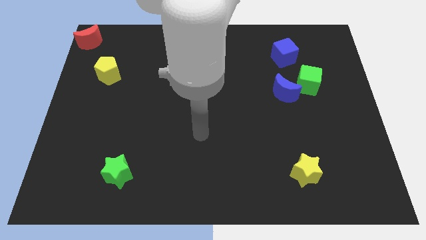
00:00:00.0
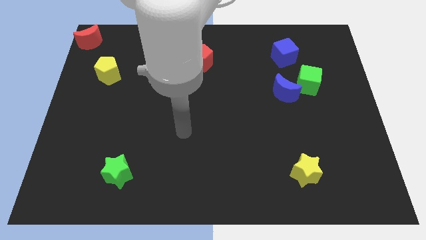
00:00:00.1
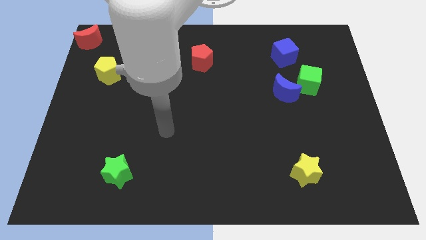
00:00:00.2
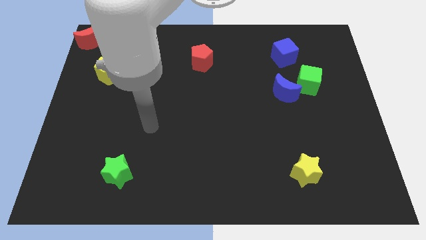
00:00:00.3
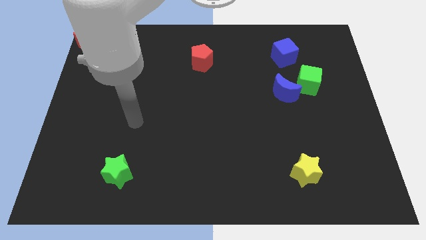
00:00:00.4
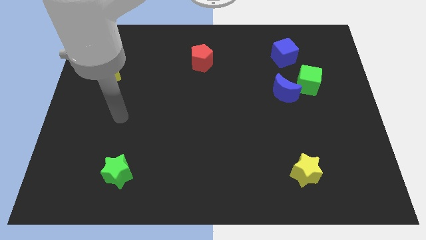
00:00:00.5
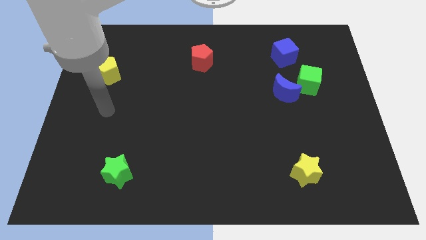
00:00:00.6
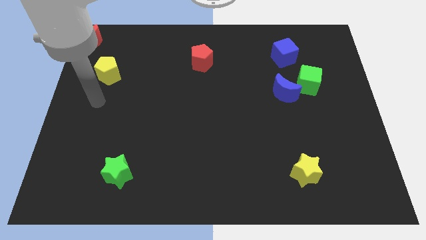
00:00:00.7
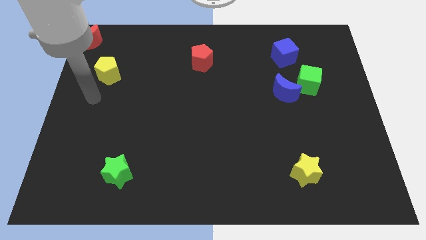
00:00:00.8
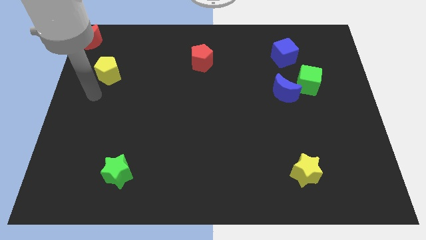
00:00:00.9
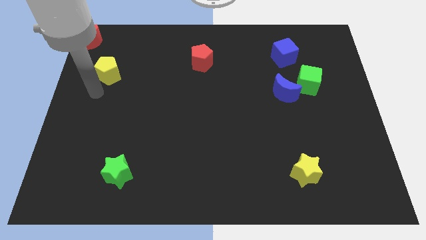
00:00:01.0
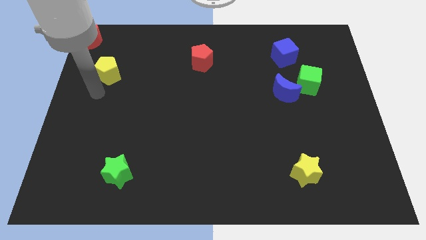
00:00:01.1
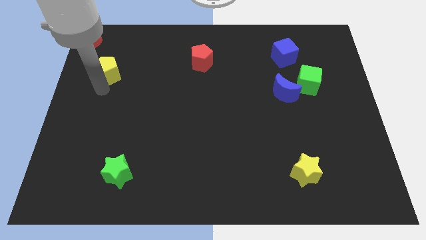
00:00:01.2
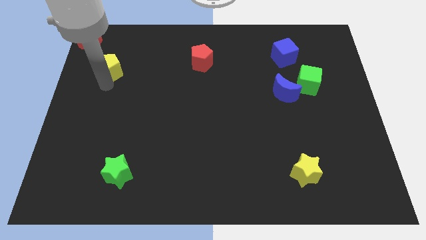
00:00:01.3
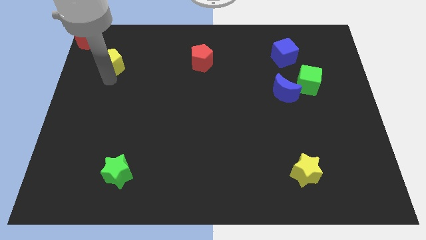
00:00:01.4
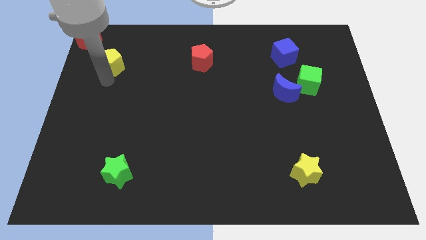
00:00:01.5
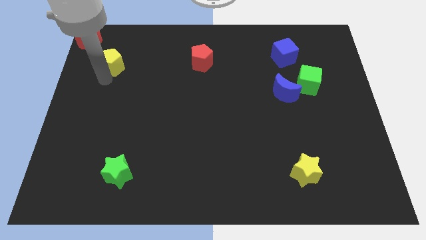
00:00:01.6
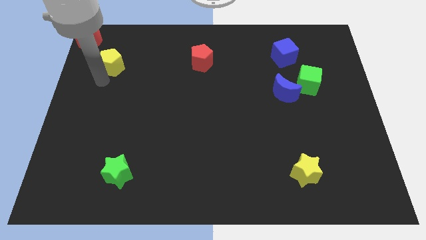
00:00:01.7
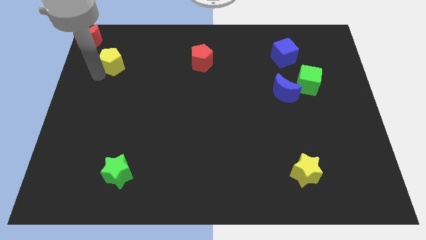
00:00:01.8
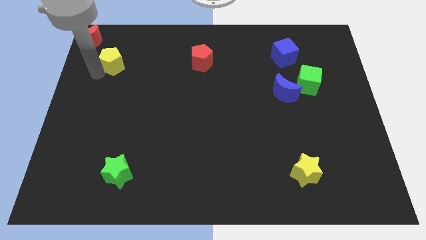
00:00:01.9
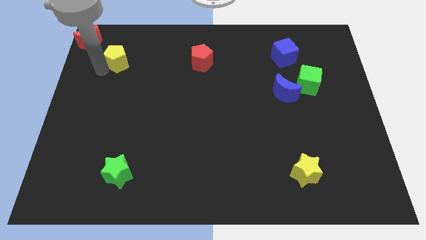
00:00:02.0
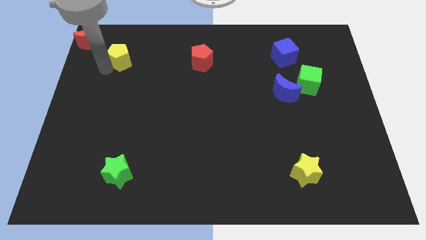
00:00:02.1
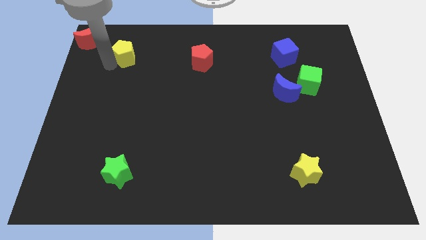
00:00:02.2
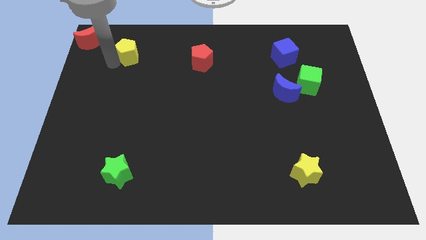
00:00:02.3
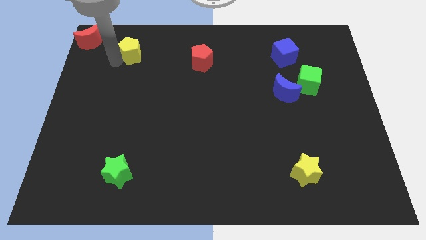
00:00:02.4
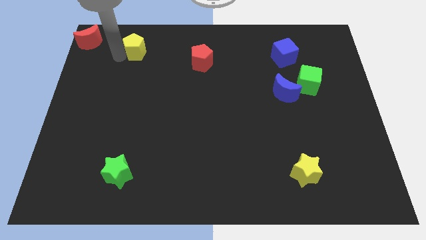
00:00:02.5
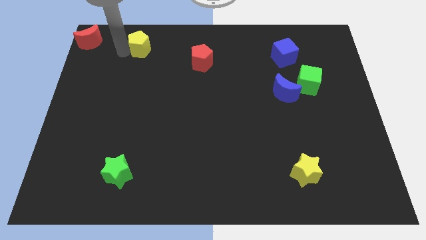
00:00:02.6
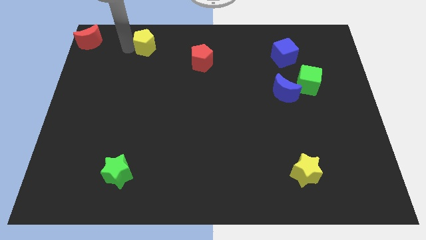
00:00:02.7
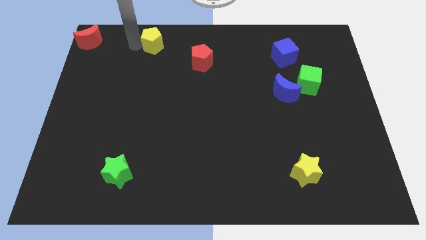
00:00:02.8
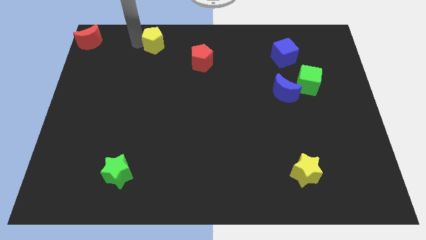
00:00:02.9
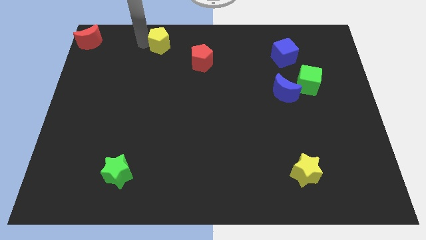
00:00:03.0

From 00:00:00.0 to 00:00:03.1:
push the yellow pentagon upwards parallel to the red moon

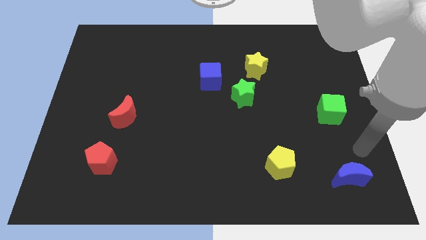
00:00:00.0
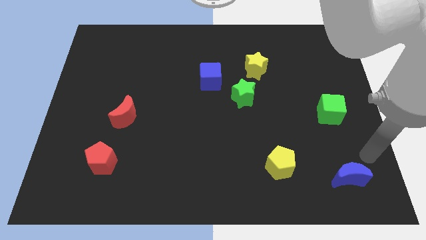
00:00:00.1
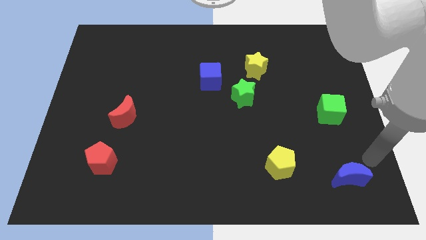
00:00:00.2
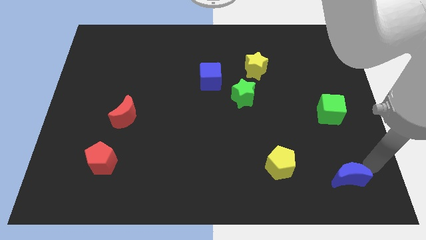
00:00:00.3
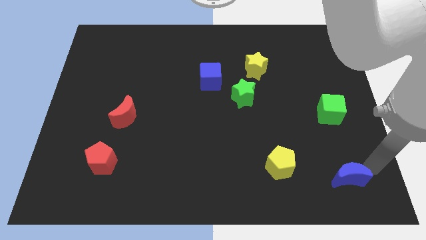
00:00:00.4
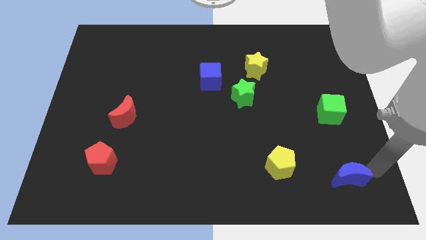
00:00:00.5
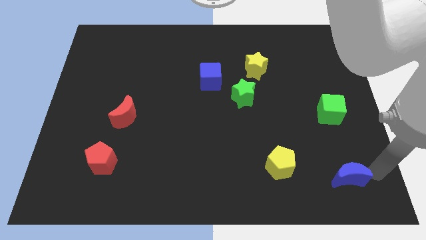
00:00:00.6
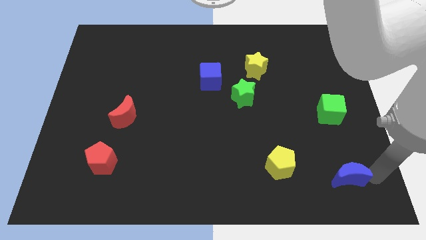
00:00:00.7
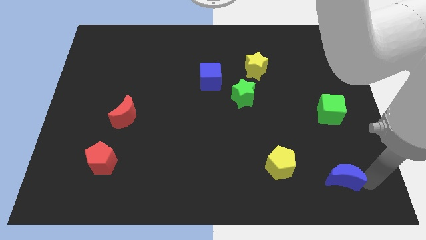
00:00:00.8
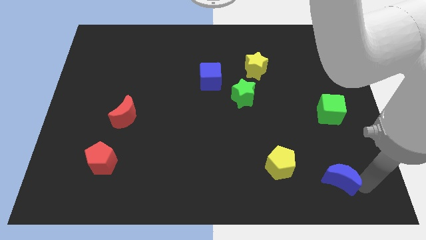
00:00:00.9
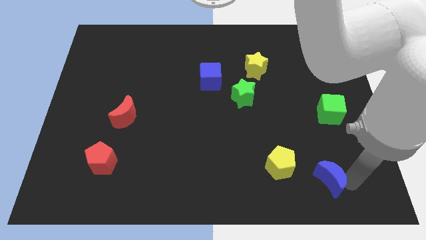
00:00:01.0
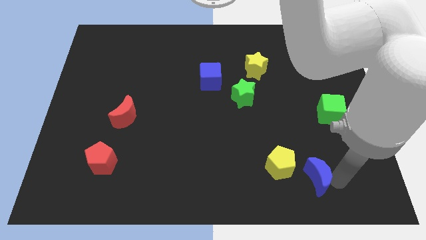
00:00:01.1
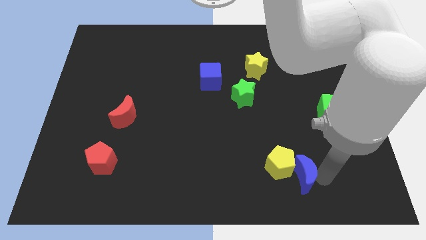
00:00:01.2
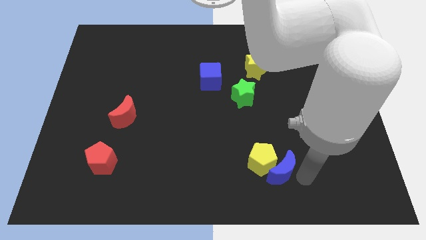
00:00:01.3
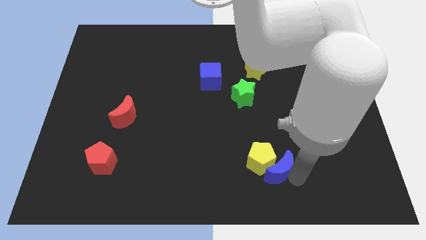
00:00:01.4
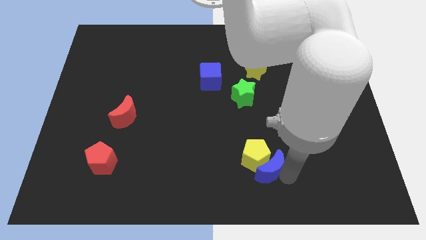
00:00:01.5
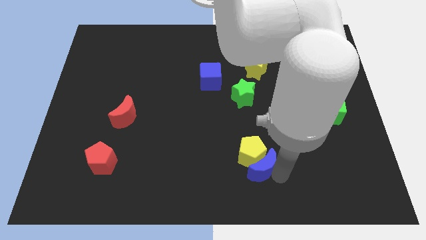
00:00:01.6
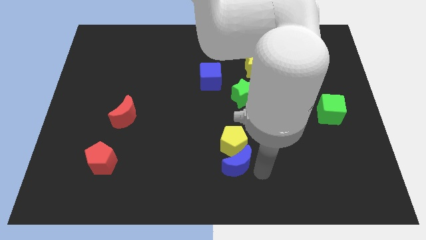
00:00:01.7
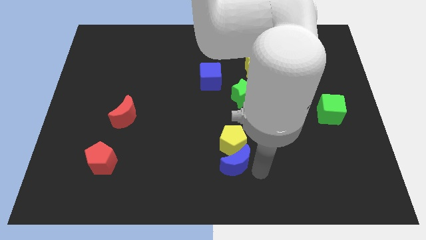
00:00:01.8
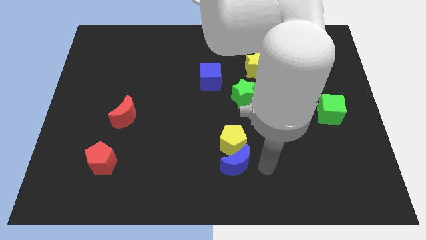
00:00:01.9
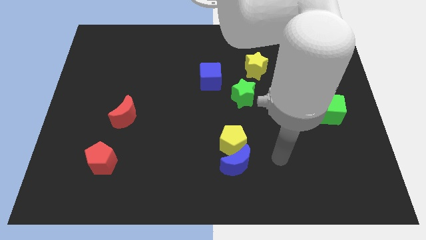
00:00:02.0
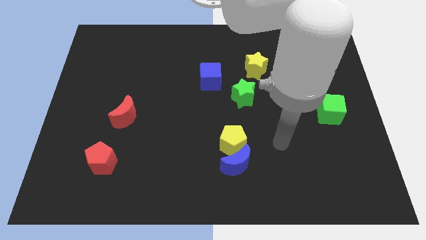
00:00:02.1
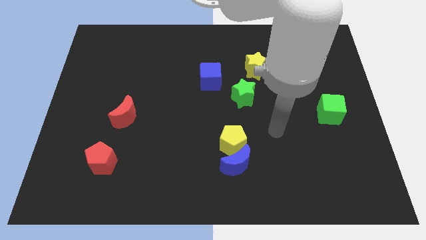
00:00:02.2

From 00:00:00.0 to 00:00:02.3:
push the blue moon and yellow pentagon together to the center

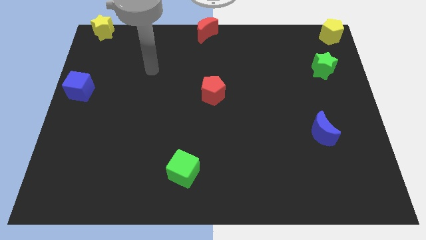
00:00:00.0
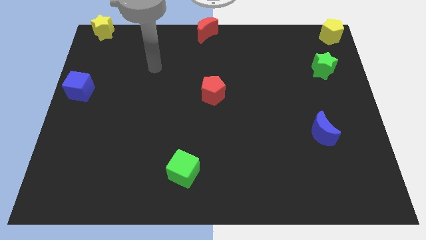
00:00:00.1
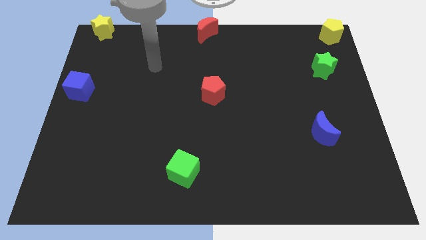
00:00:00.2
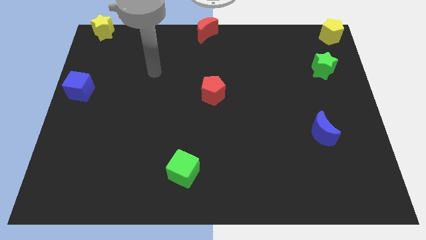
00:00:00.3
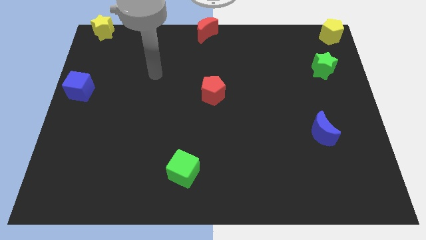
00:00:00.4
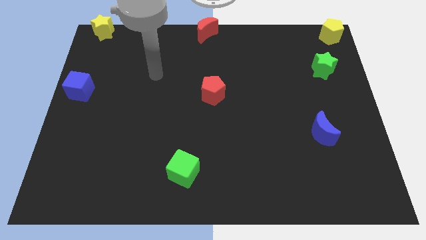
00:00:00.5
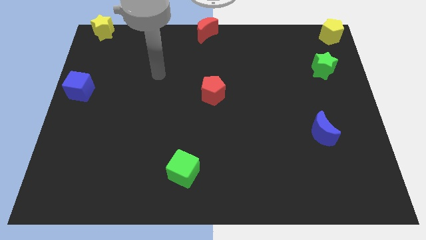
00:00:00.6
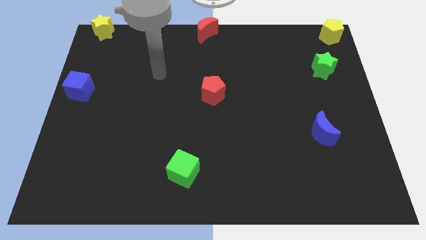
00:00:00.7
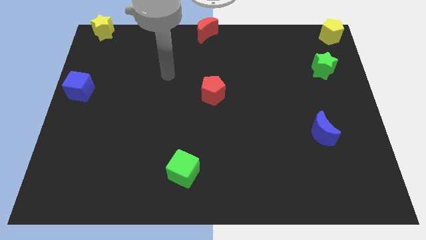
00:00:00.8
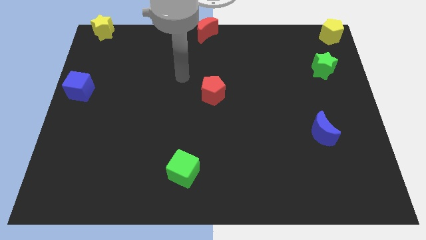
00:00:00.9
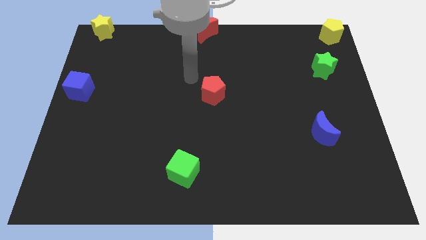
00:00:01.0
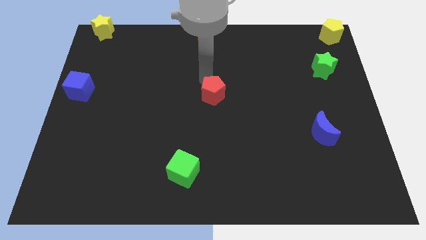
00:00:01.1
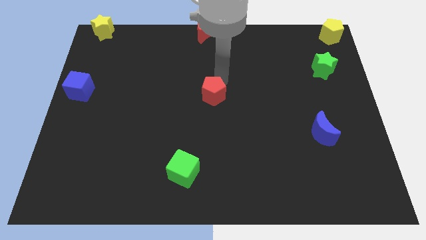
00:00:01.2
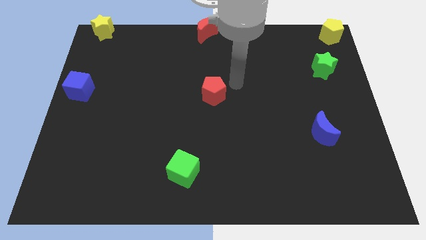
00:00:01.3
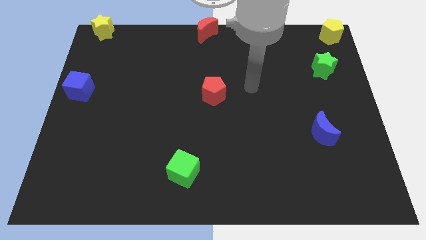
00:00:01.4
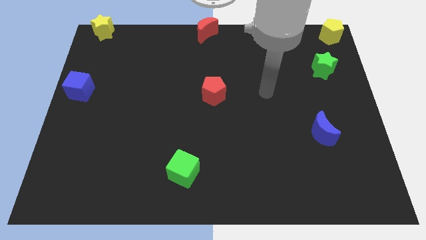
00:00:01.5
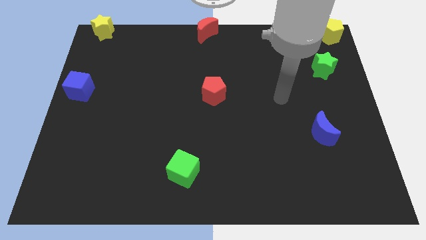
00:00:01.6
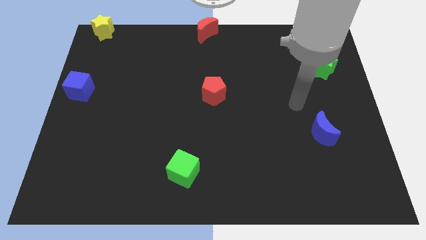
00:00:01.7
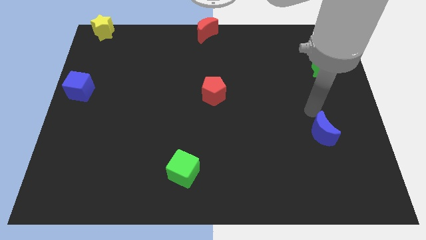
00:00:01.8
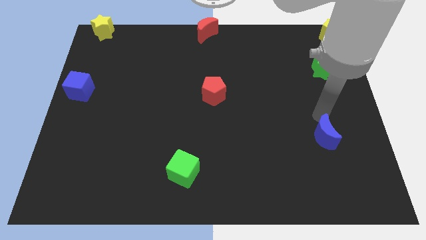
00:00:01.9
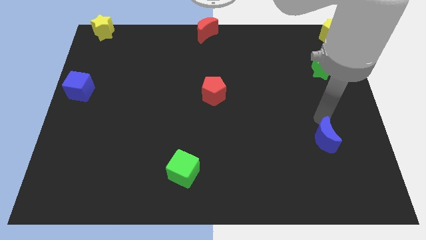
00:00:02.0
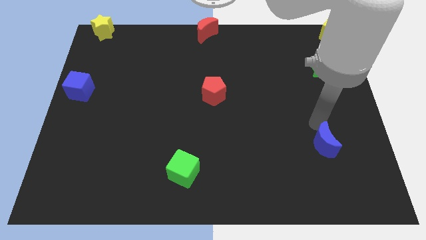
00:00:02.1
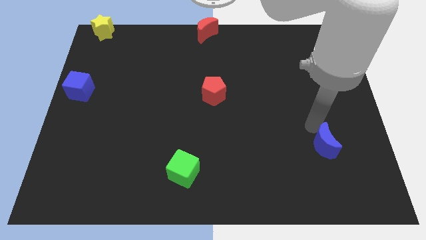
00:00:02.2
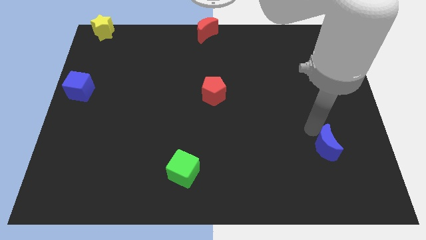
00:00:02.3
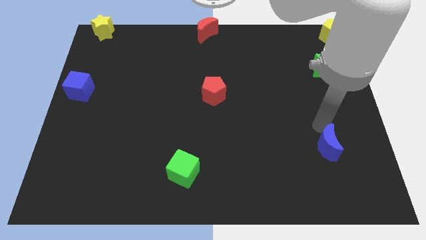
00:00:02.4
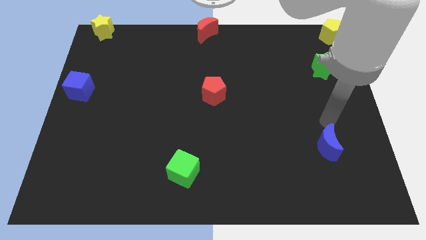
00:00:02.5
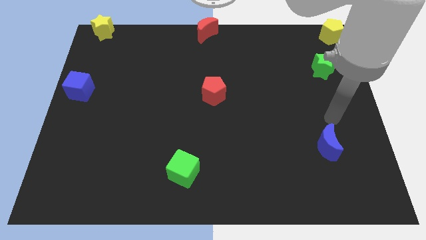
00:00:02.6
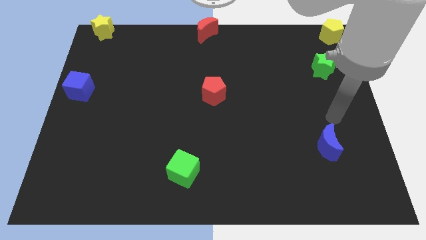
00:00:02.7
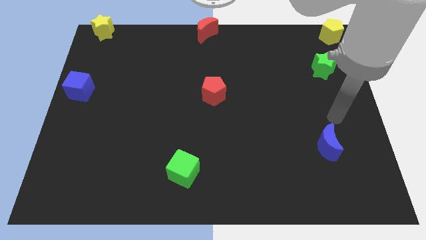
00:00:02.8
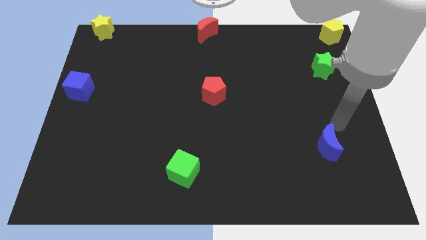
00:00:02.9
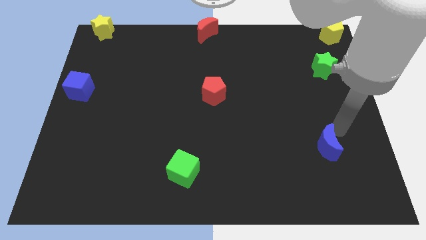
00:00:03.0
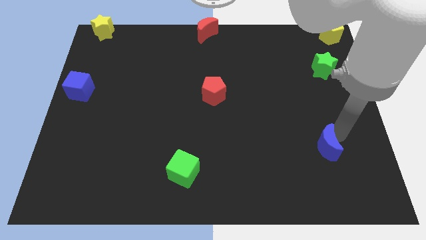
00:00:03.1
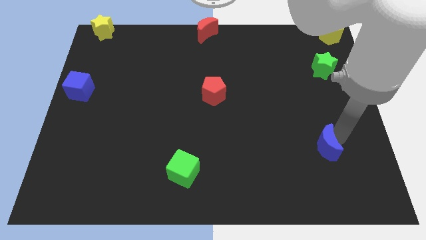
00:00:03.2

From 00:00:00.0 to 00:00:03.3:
move the blue moon slightly downwards

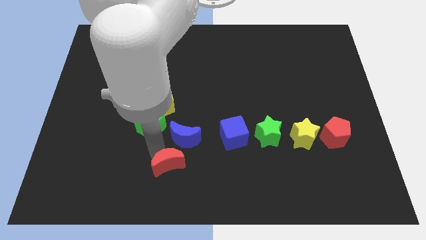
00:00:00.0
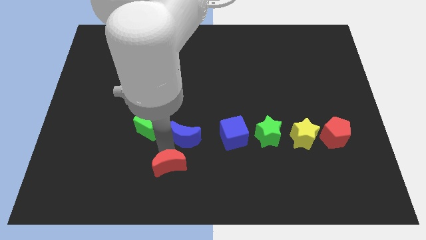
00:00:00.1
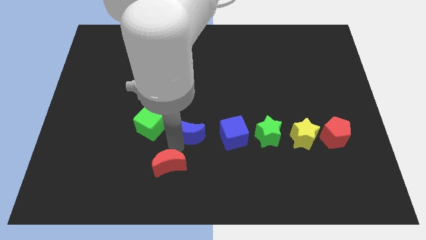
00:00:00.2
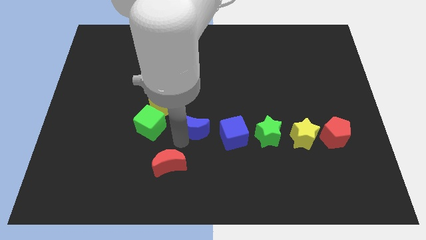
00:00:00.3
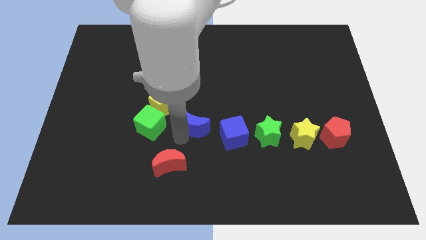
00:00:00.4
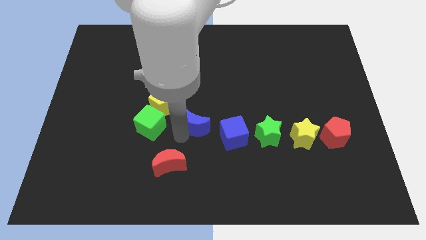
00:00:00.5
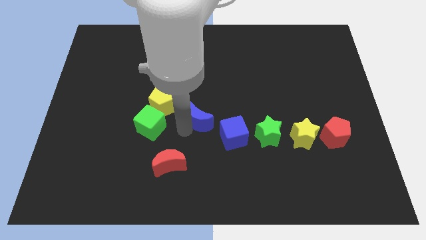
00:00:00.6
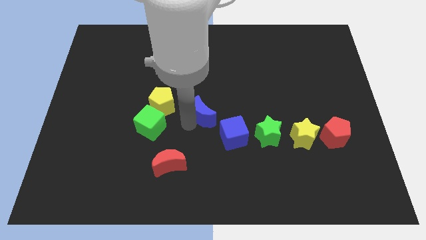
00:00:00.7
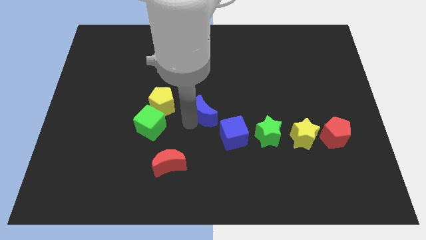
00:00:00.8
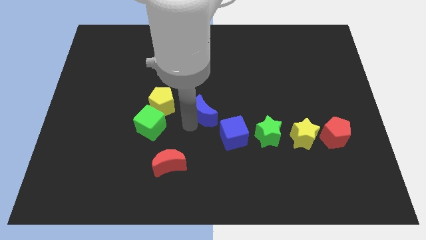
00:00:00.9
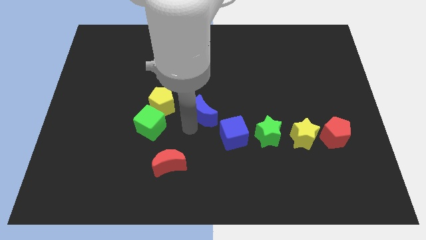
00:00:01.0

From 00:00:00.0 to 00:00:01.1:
move blue moon upwards diagonally
